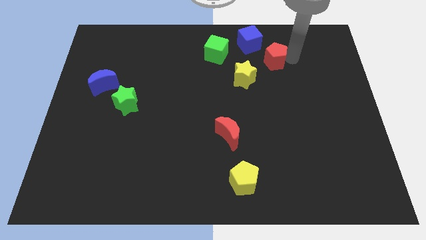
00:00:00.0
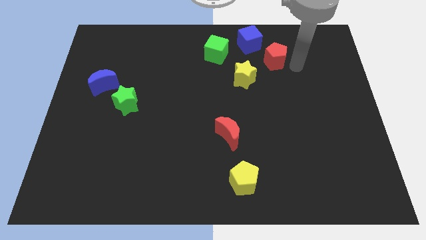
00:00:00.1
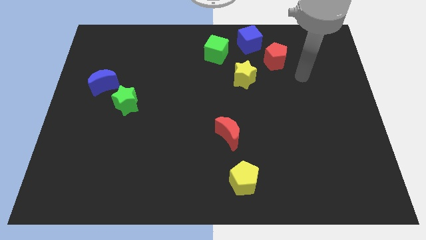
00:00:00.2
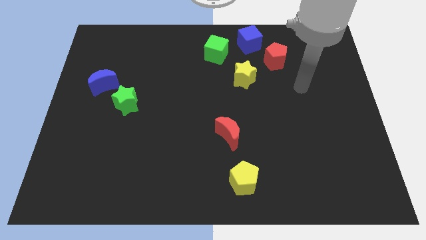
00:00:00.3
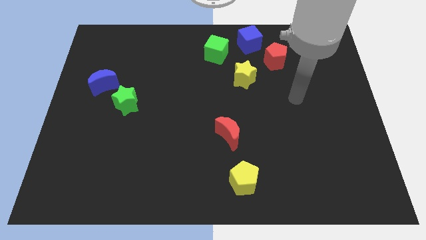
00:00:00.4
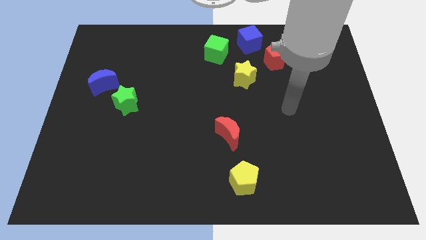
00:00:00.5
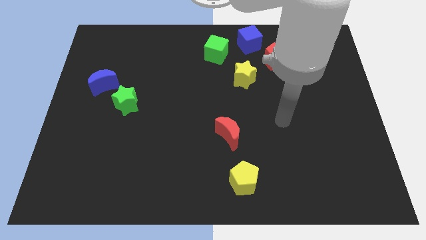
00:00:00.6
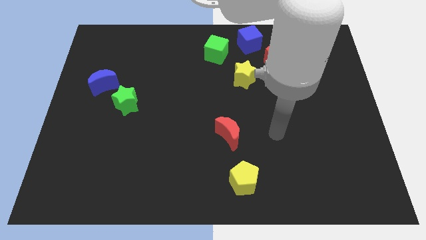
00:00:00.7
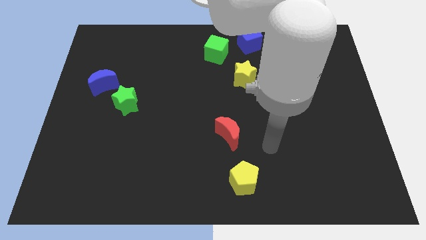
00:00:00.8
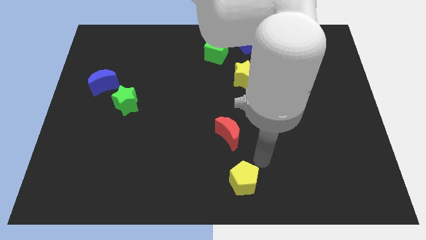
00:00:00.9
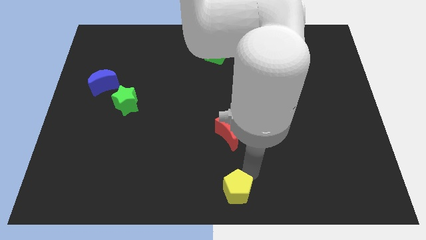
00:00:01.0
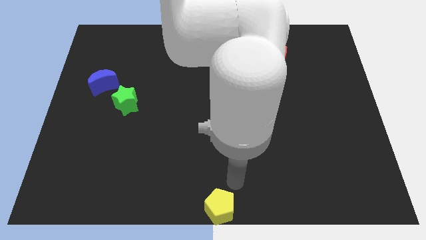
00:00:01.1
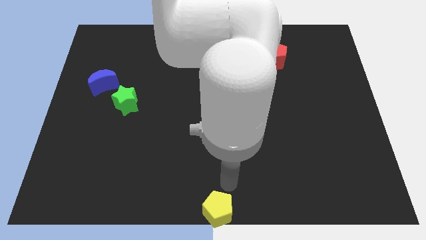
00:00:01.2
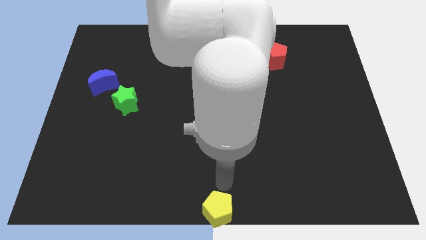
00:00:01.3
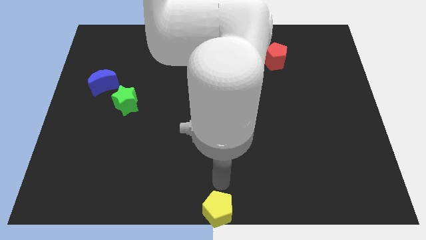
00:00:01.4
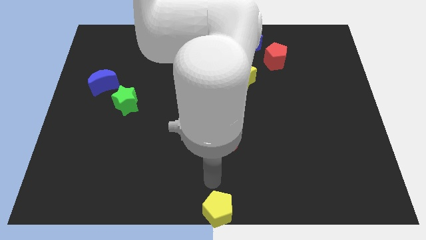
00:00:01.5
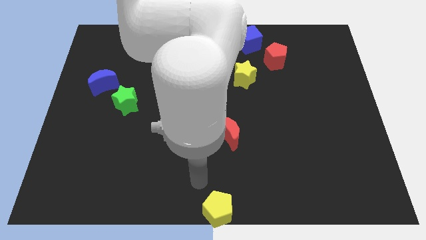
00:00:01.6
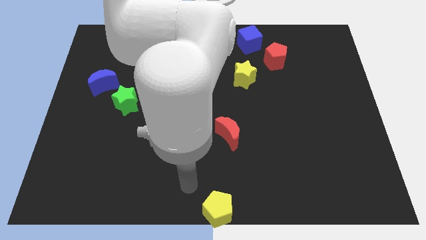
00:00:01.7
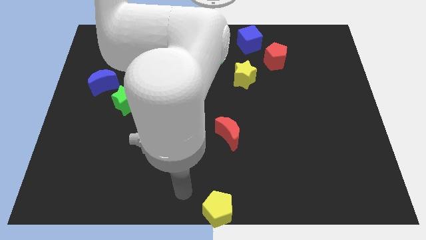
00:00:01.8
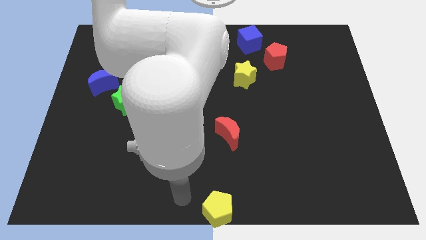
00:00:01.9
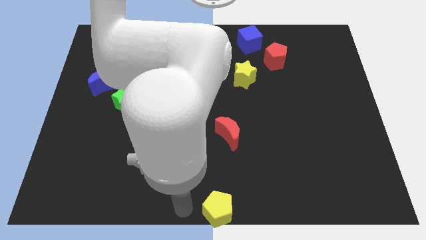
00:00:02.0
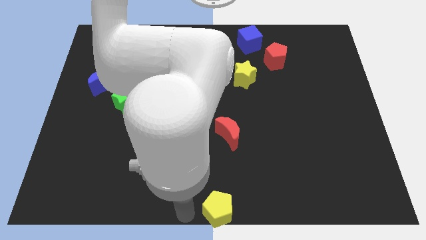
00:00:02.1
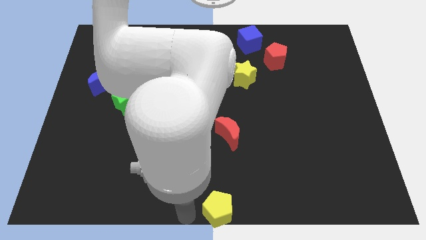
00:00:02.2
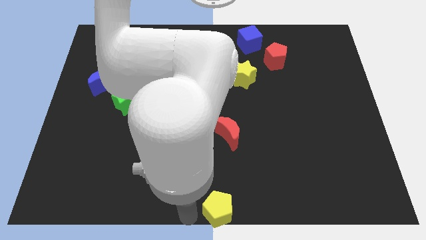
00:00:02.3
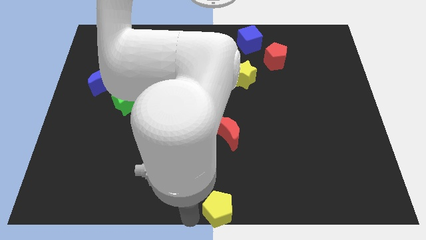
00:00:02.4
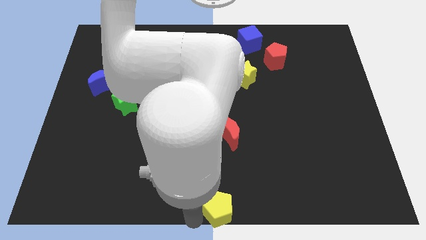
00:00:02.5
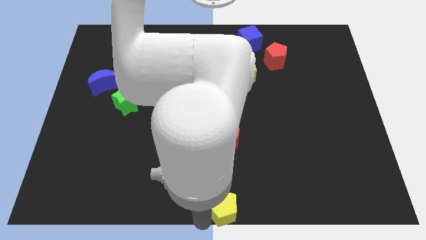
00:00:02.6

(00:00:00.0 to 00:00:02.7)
place the yellow pentagon at the bottom center of the board

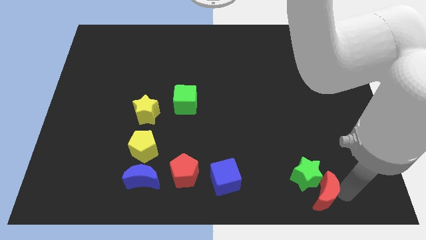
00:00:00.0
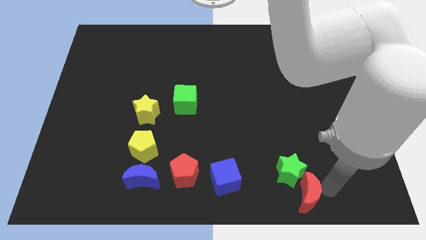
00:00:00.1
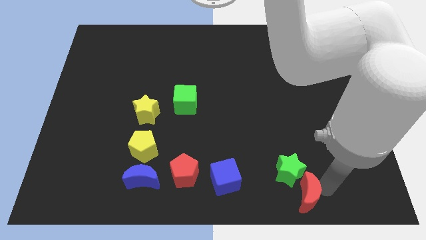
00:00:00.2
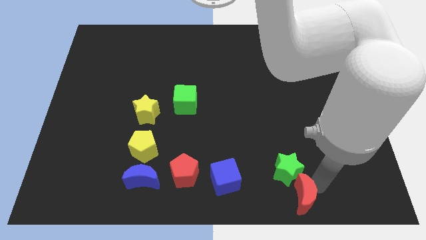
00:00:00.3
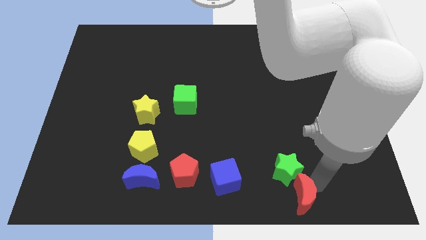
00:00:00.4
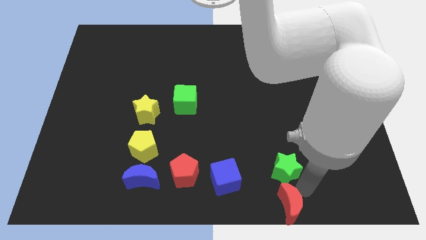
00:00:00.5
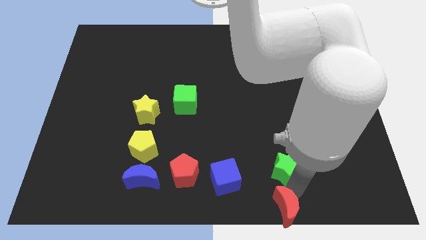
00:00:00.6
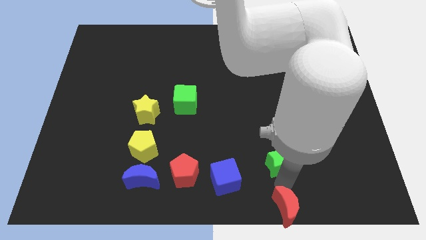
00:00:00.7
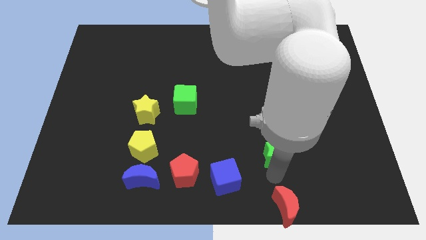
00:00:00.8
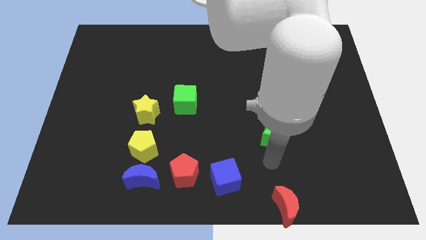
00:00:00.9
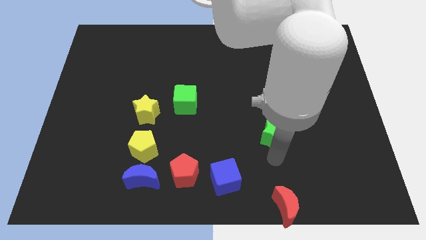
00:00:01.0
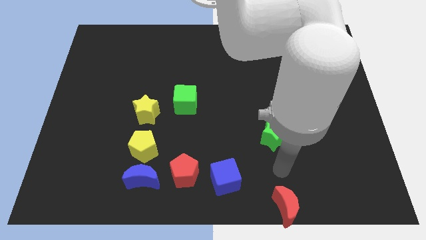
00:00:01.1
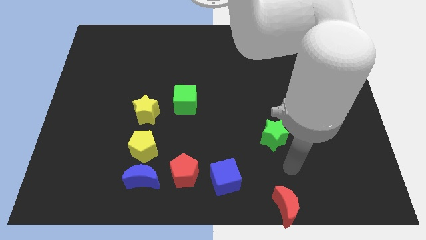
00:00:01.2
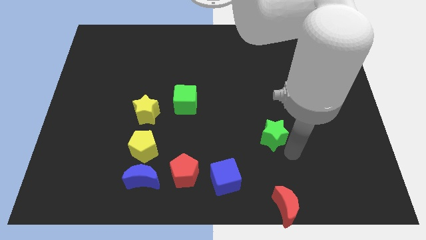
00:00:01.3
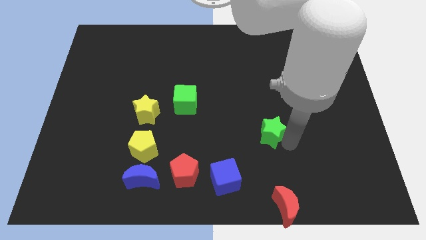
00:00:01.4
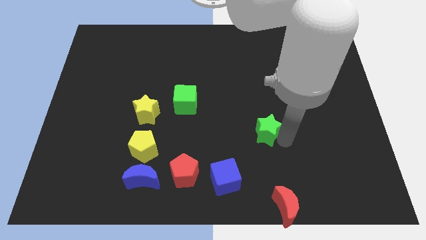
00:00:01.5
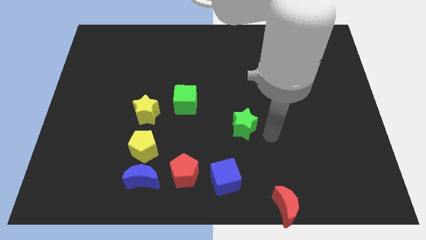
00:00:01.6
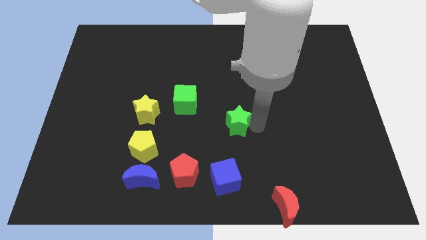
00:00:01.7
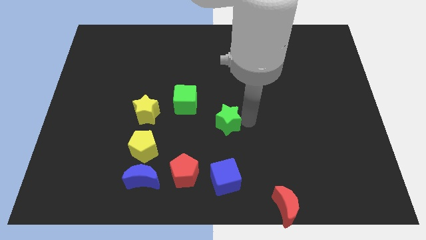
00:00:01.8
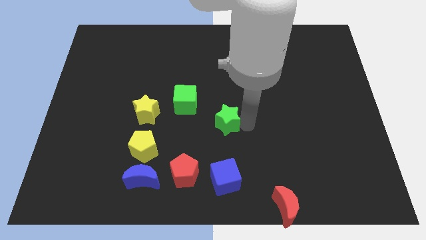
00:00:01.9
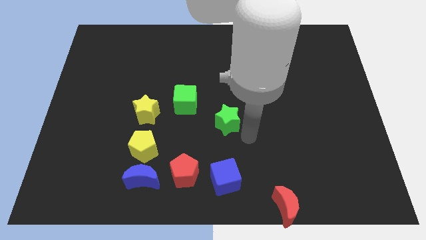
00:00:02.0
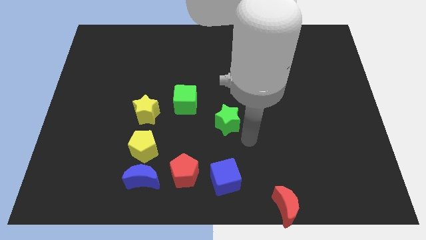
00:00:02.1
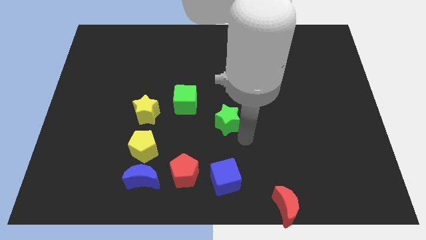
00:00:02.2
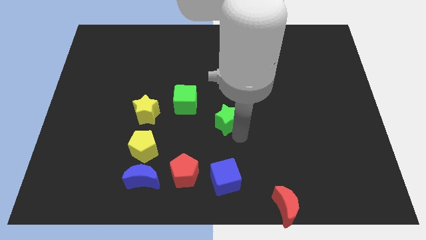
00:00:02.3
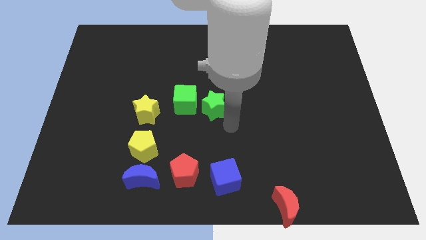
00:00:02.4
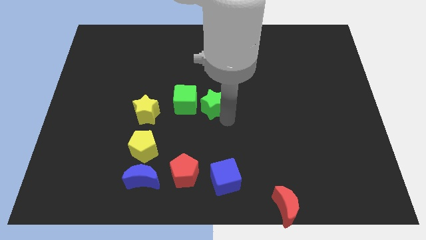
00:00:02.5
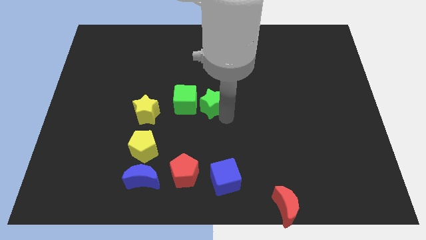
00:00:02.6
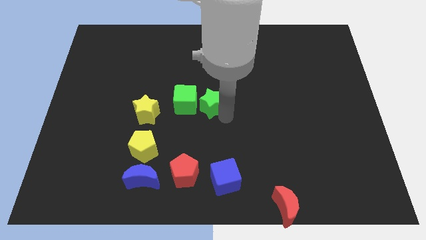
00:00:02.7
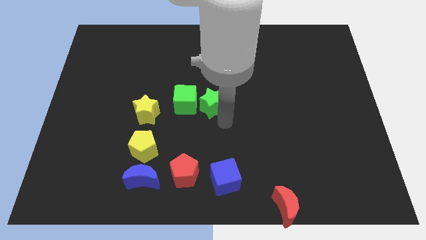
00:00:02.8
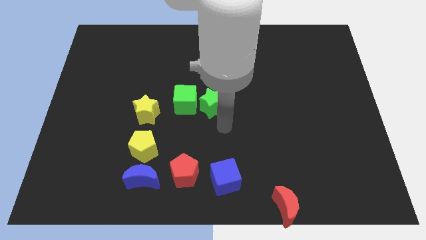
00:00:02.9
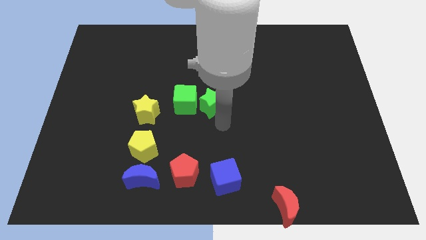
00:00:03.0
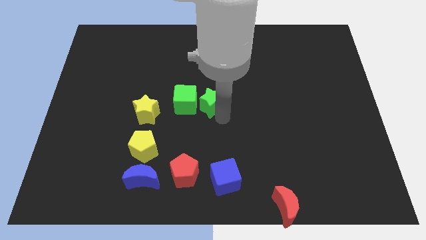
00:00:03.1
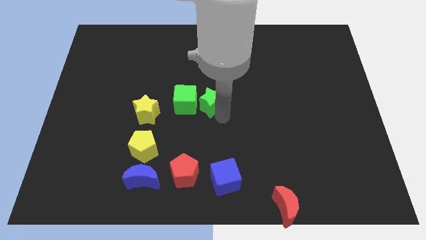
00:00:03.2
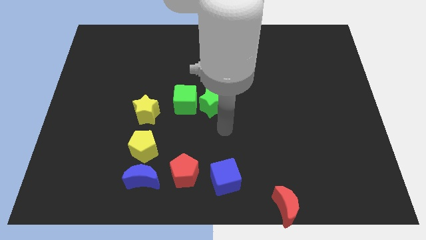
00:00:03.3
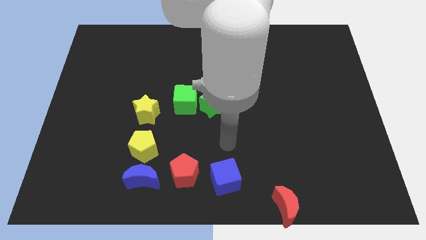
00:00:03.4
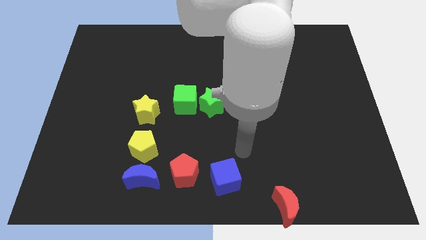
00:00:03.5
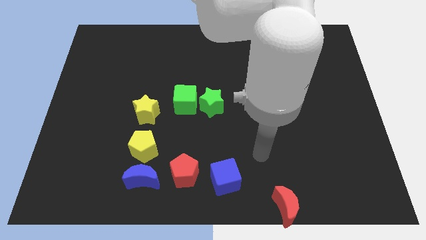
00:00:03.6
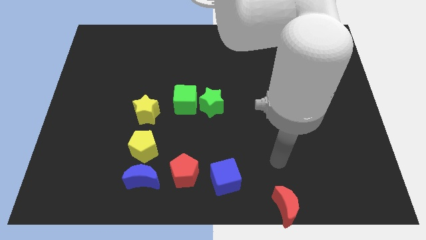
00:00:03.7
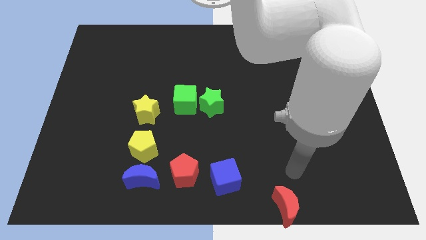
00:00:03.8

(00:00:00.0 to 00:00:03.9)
separate green star and the red moon

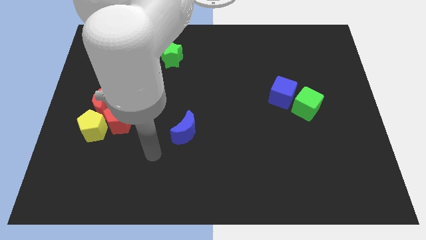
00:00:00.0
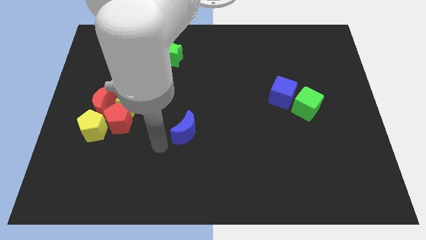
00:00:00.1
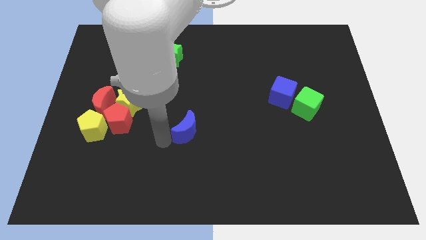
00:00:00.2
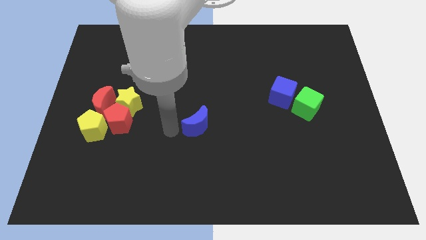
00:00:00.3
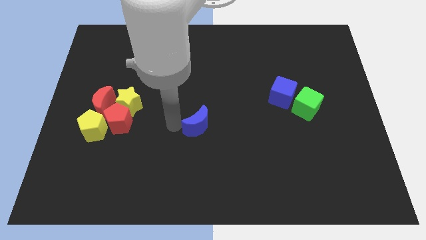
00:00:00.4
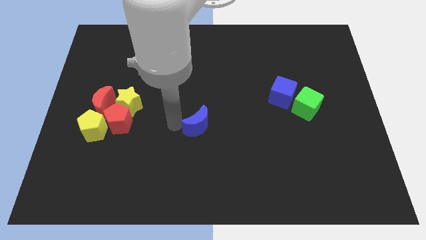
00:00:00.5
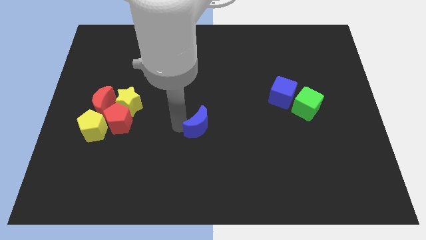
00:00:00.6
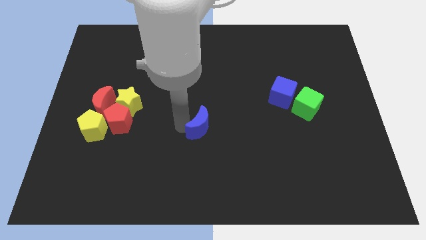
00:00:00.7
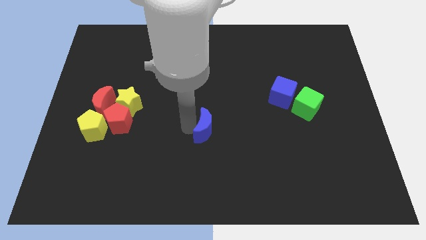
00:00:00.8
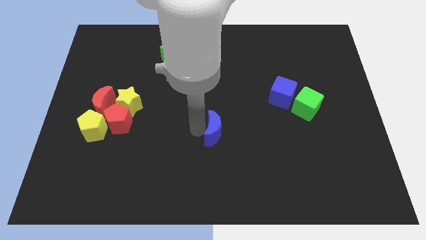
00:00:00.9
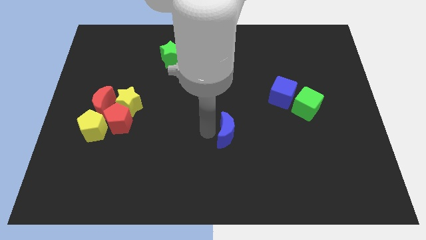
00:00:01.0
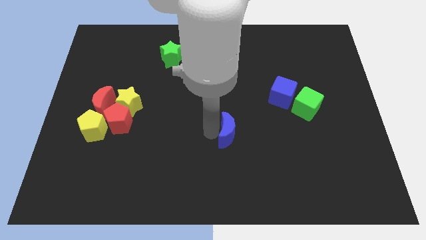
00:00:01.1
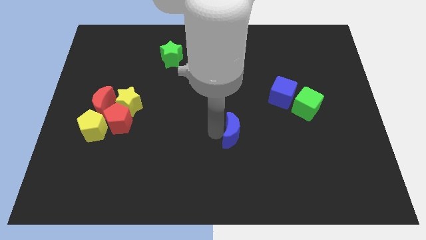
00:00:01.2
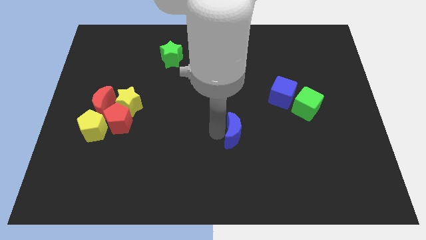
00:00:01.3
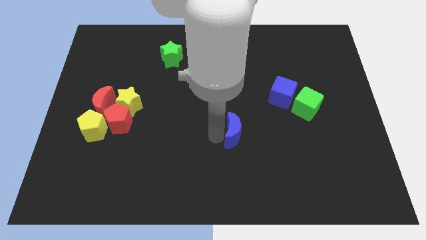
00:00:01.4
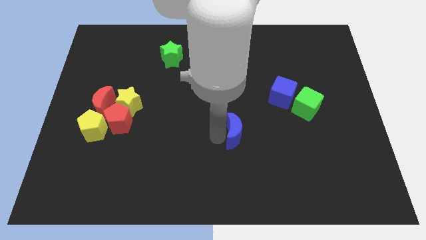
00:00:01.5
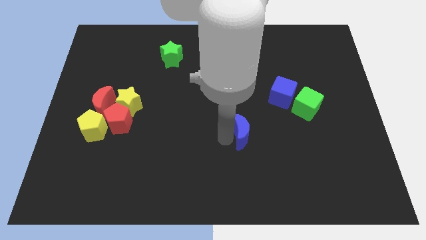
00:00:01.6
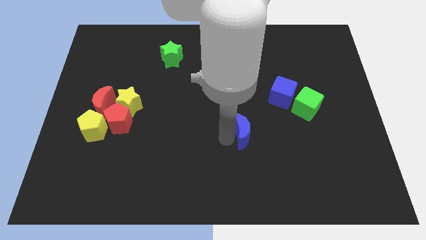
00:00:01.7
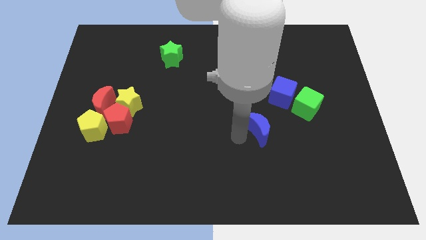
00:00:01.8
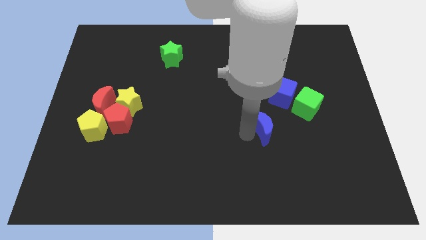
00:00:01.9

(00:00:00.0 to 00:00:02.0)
move the blue moon towards blue cube

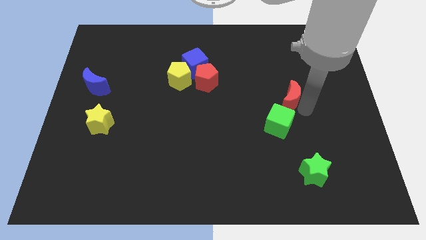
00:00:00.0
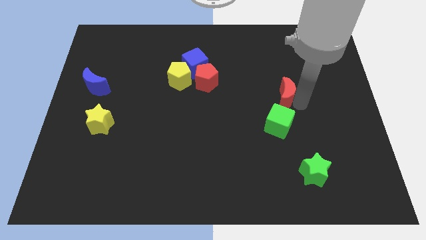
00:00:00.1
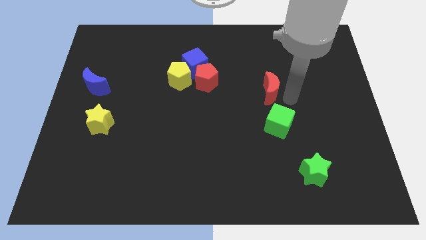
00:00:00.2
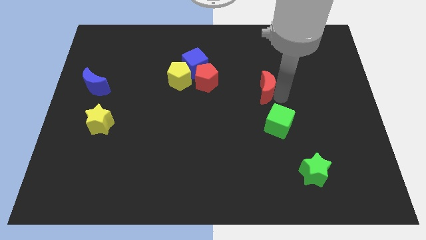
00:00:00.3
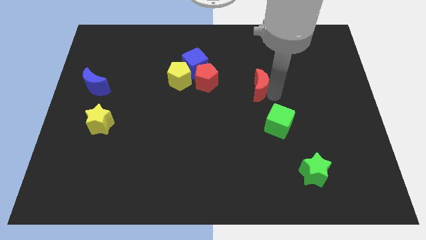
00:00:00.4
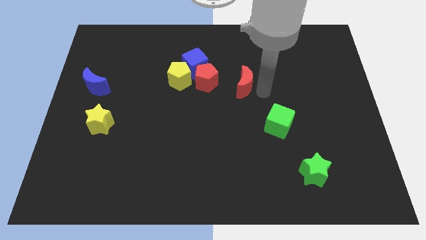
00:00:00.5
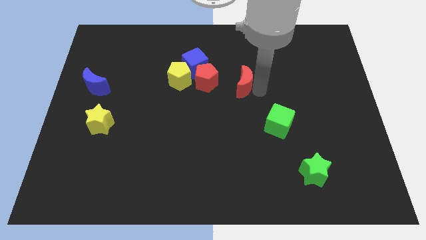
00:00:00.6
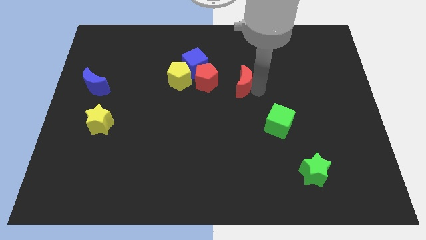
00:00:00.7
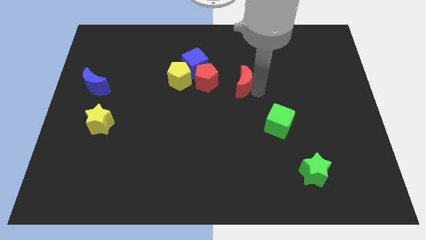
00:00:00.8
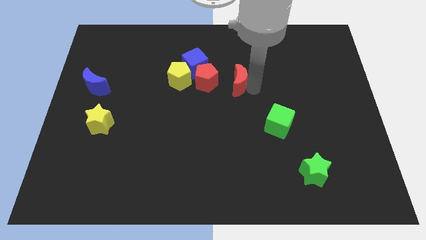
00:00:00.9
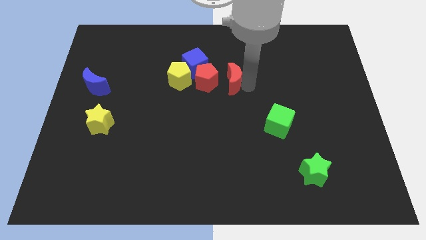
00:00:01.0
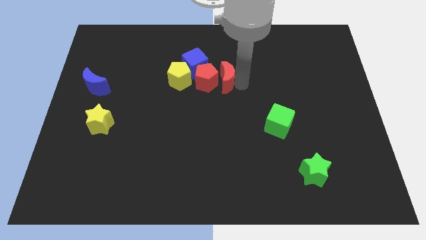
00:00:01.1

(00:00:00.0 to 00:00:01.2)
put the red moon to the right side of red pentagon
